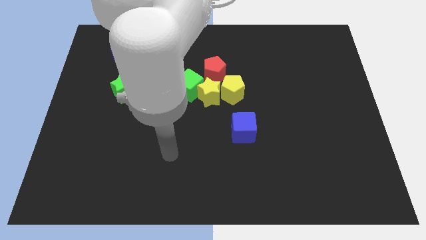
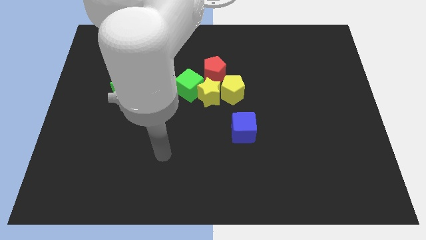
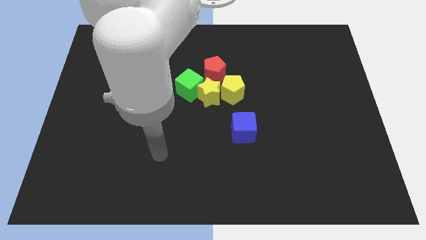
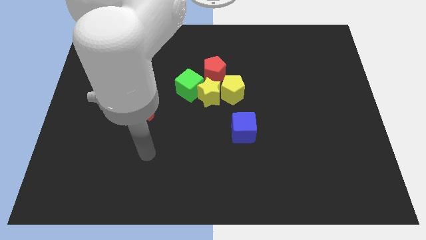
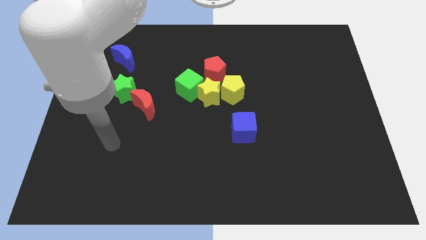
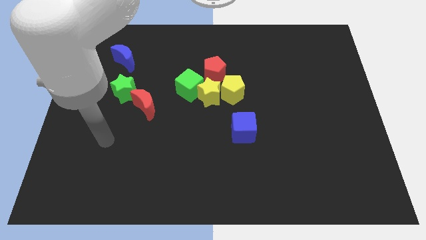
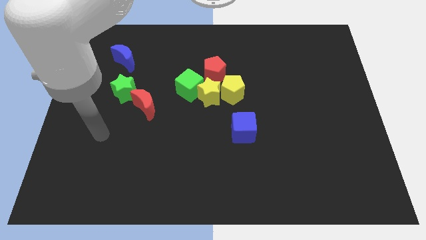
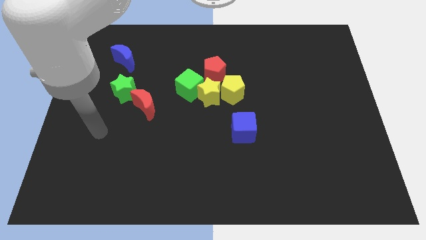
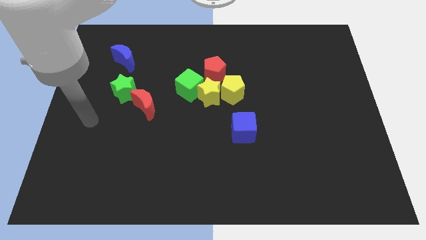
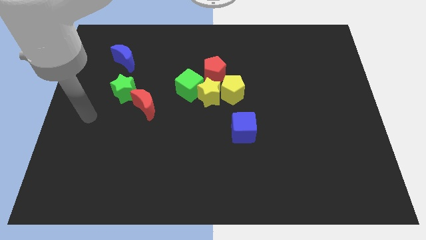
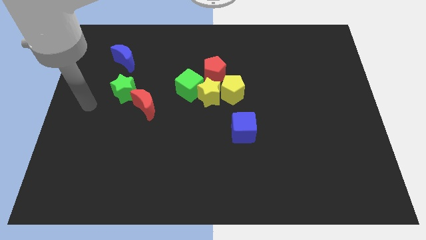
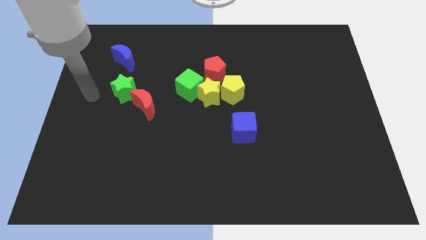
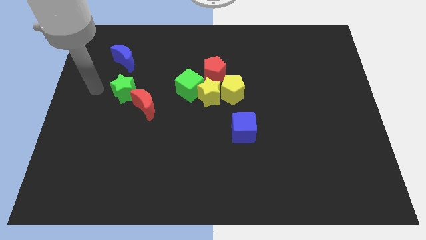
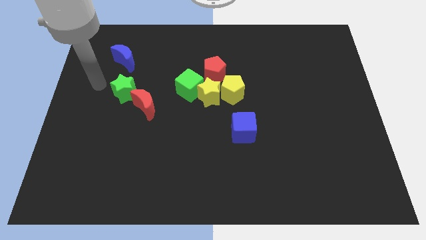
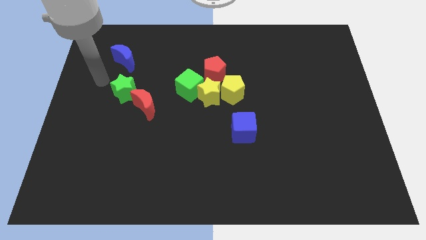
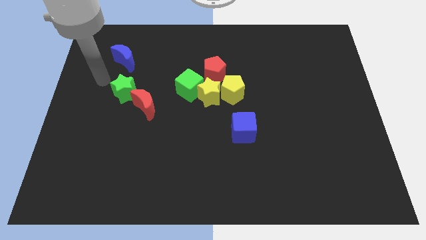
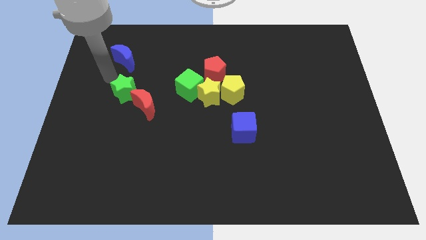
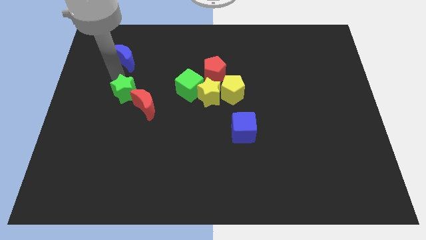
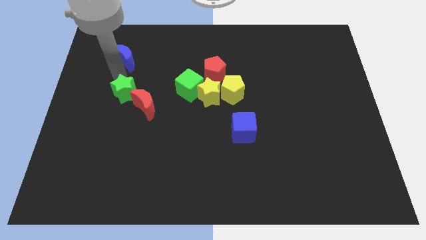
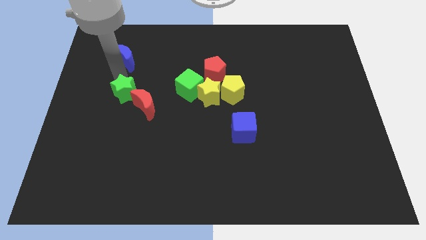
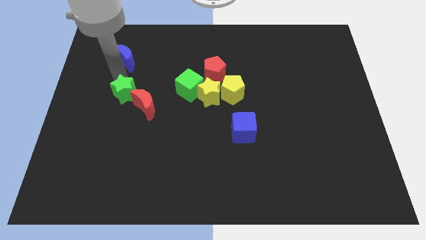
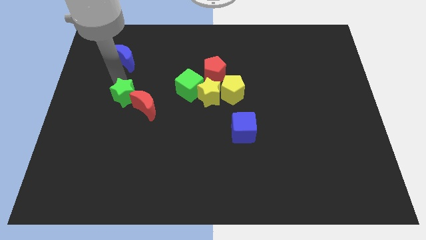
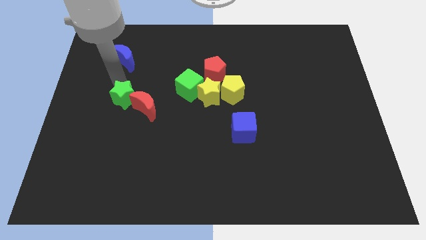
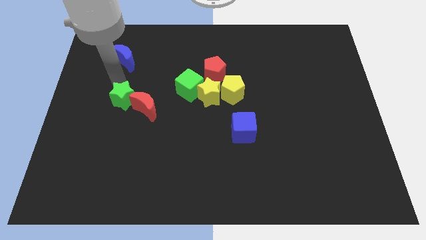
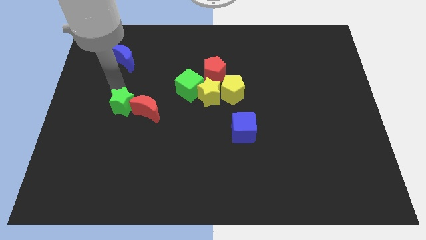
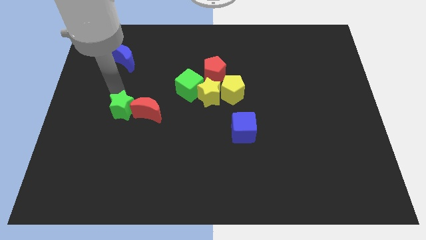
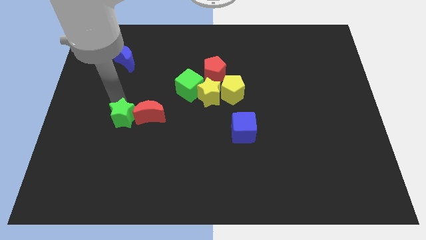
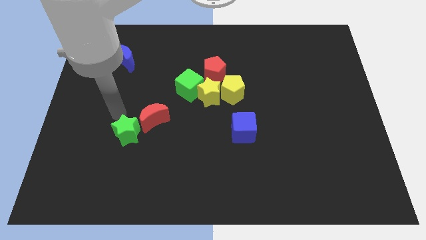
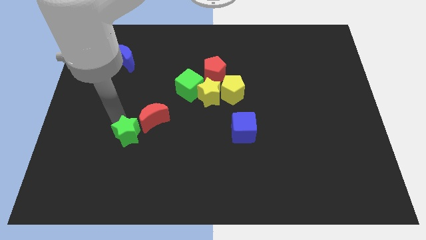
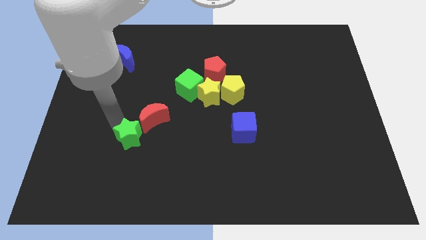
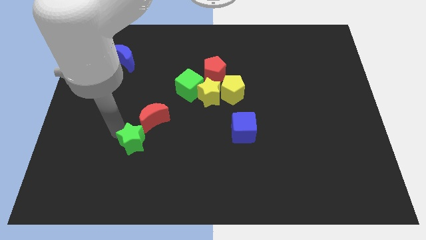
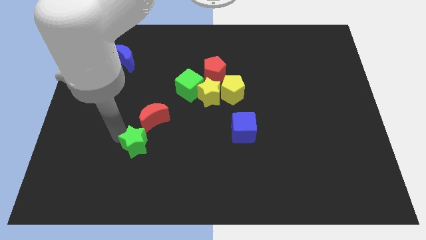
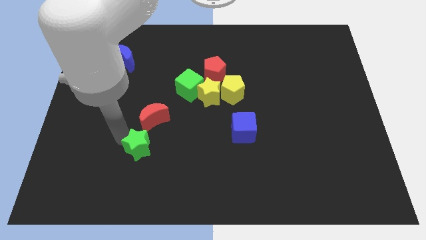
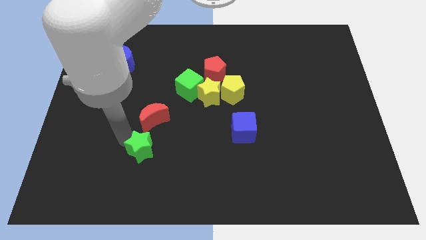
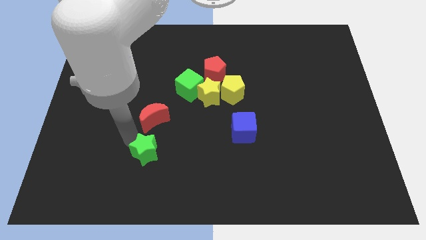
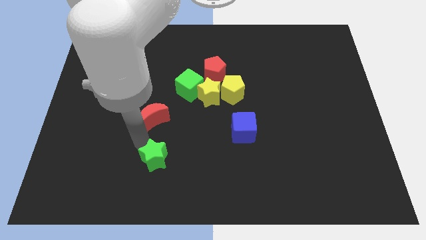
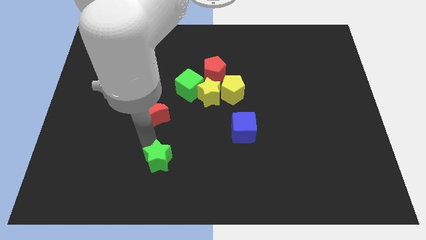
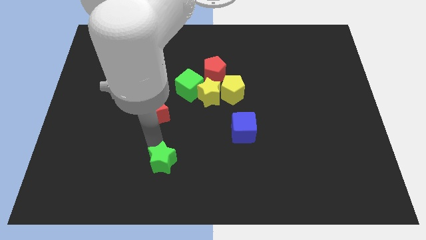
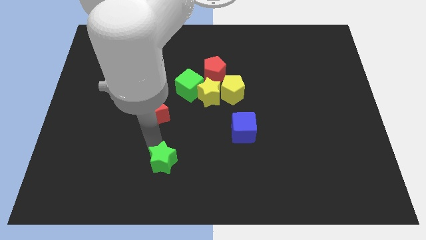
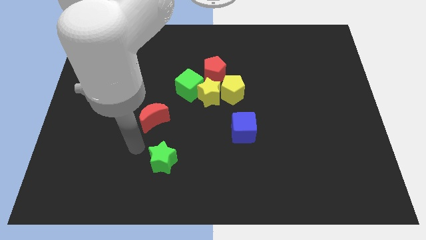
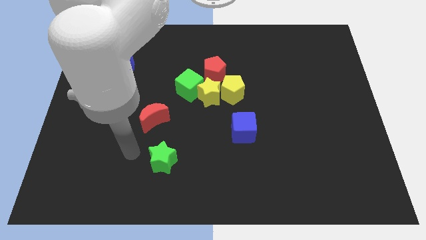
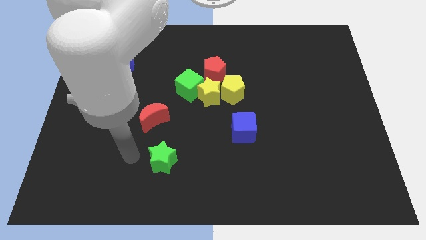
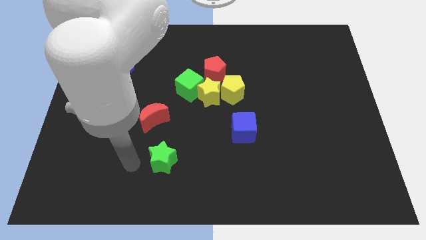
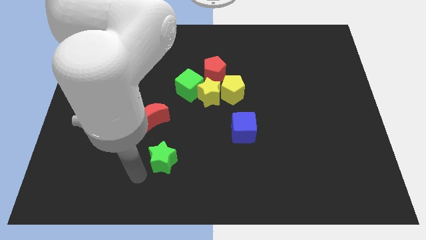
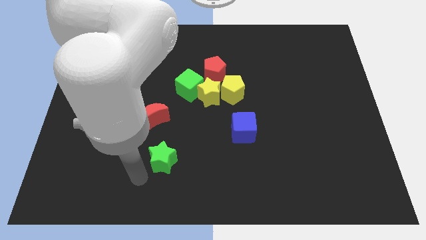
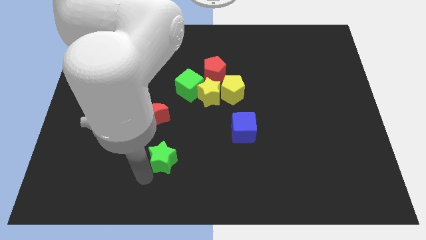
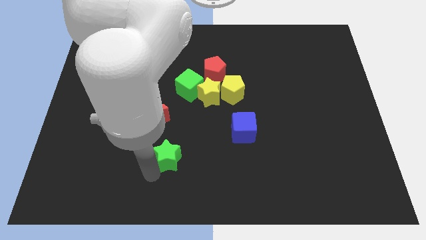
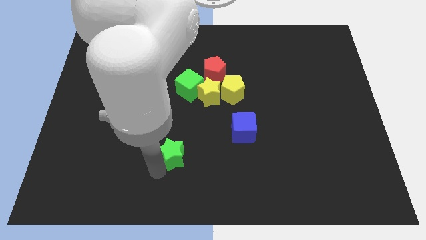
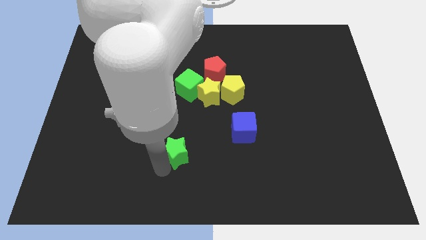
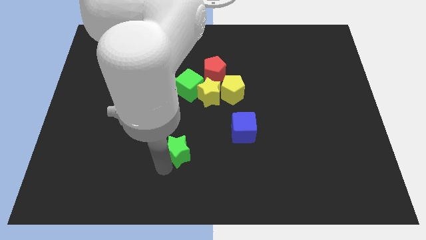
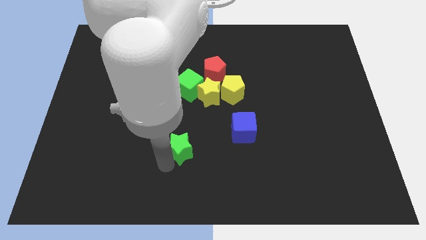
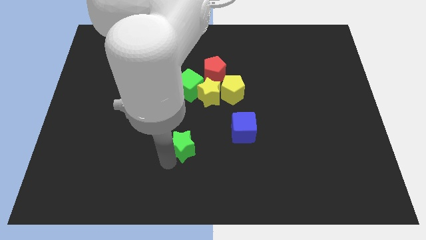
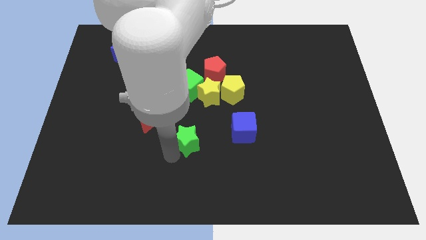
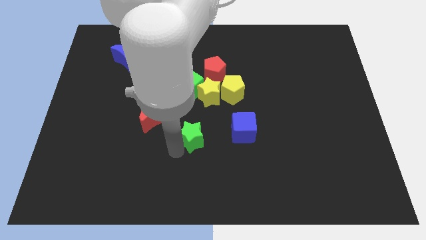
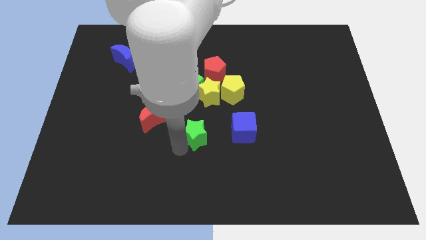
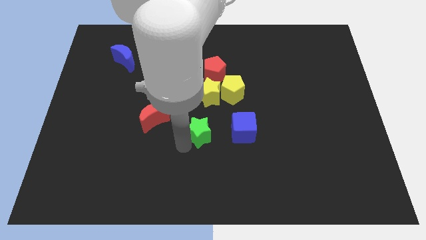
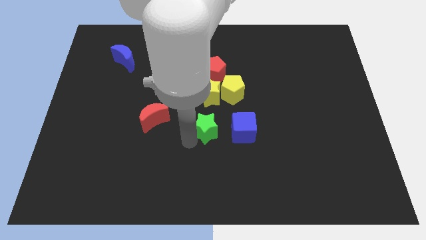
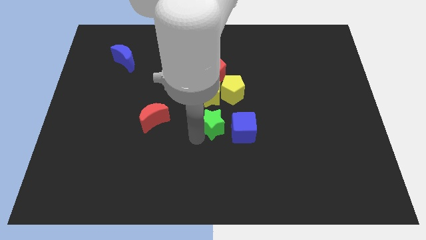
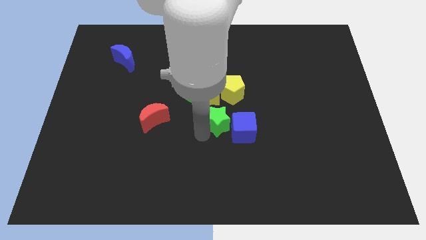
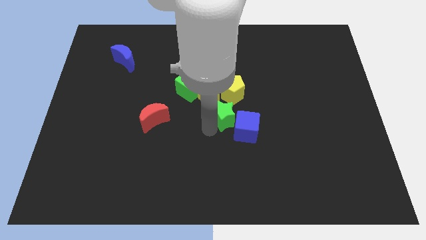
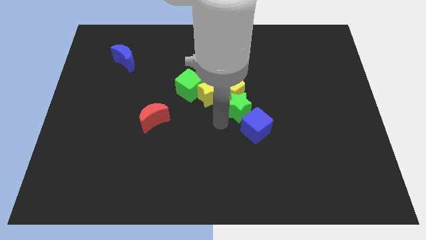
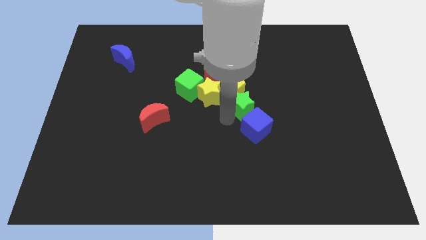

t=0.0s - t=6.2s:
slide the green star to the yellow pentagon

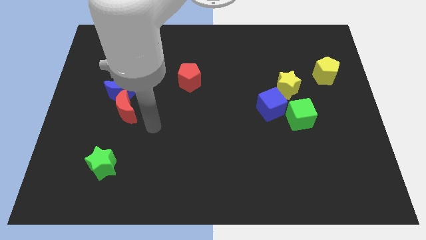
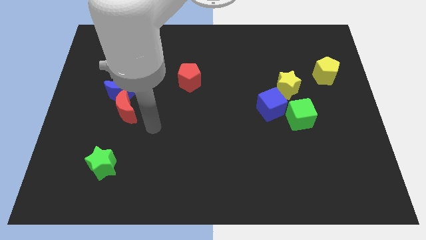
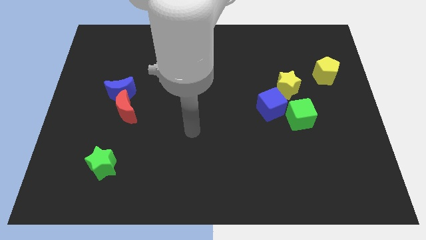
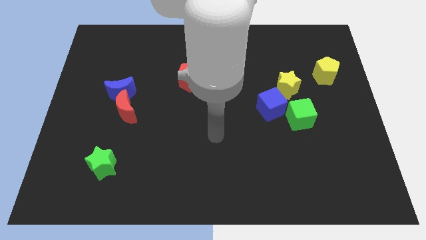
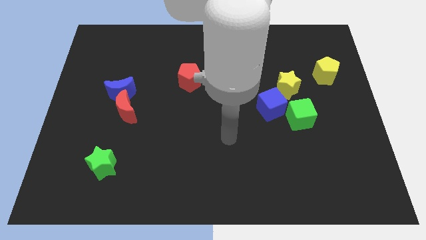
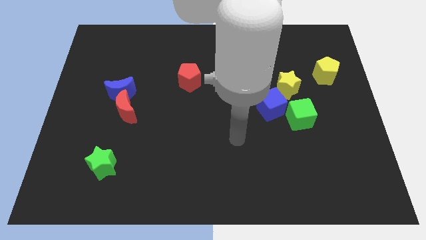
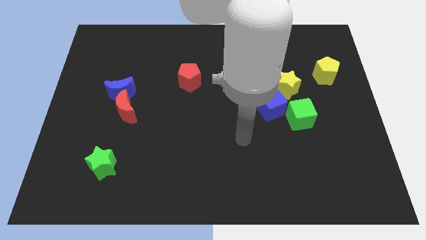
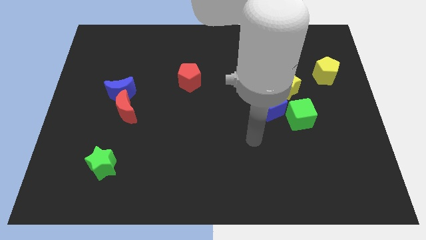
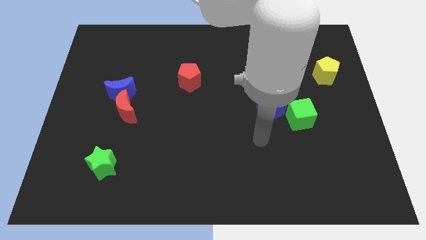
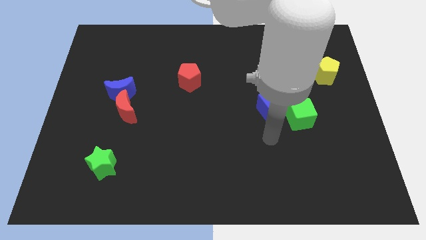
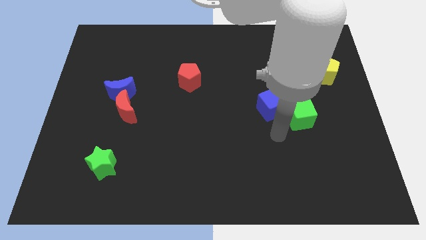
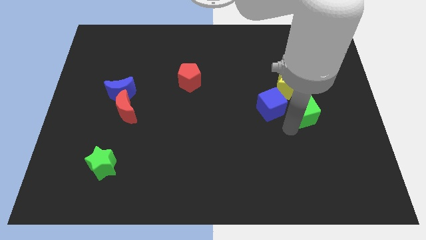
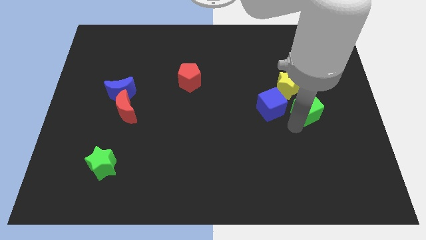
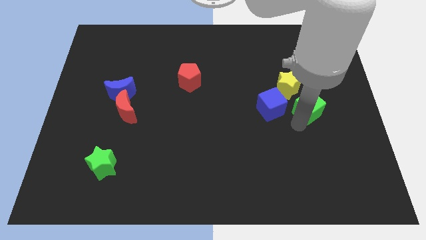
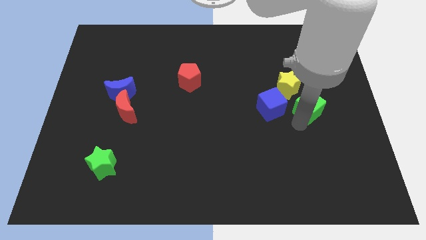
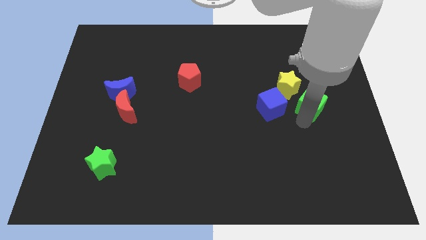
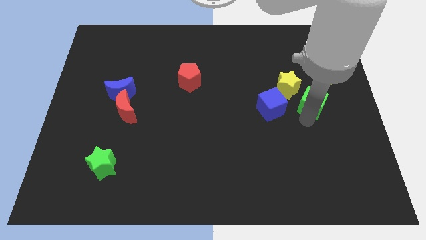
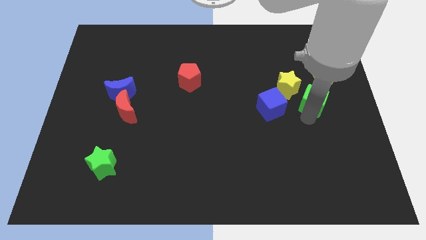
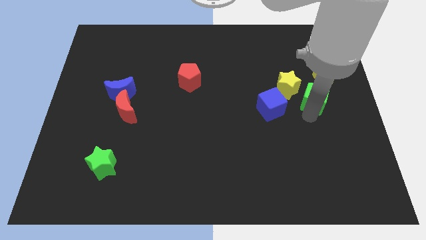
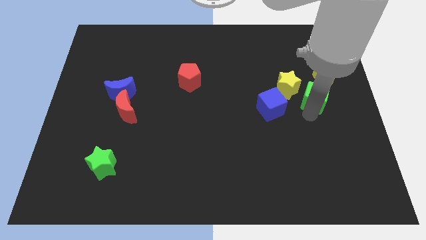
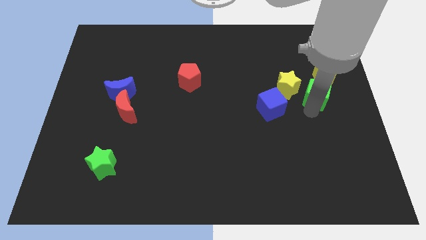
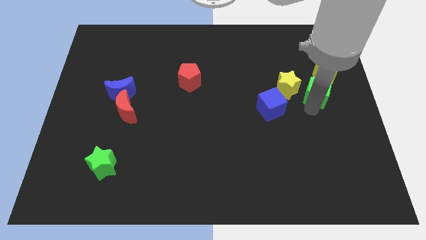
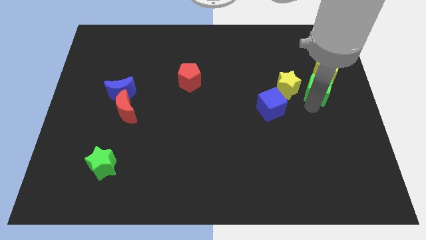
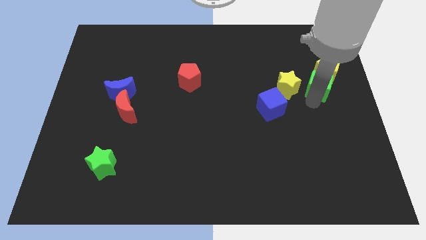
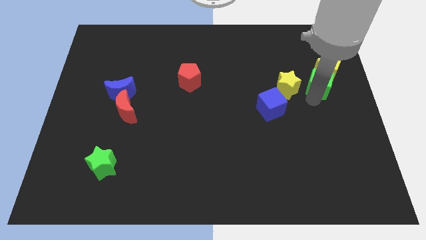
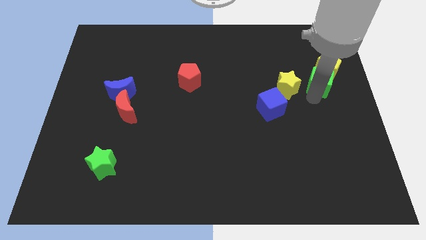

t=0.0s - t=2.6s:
slide the green cube close to the yellow pentagon
